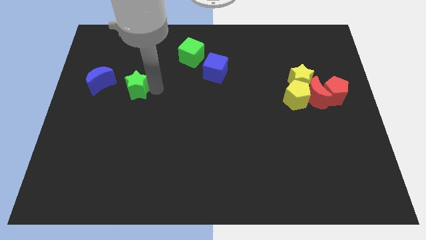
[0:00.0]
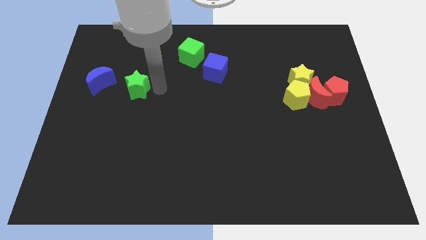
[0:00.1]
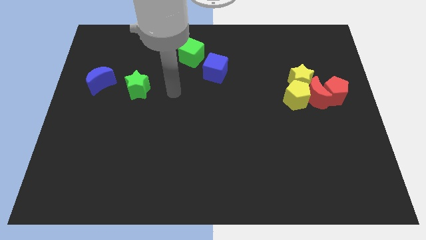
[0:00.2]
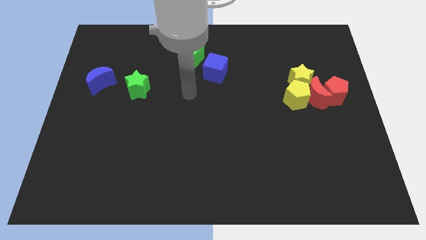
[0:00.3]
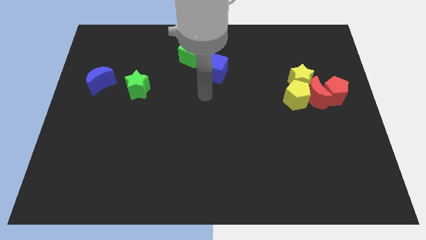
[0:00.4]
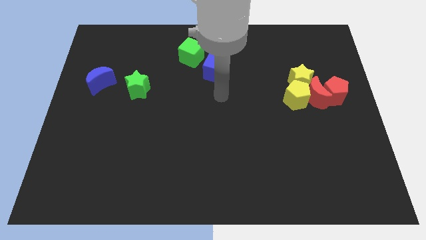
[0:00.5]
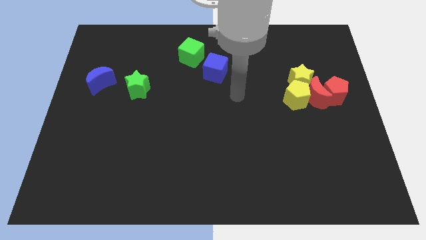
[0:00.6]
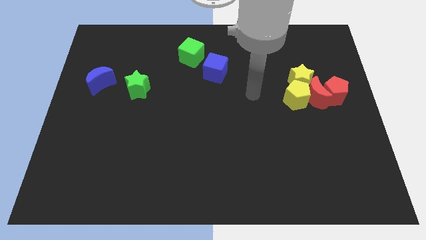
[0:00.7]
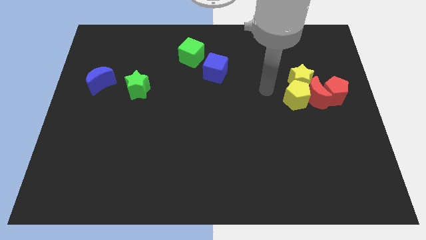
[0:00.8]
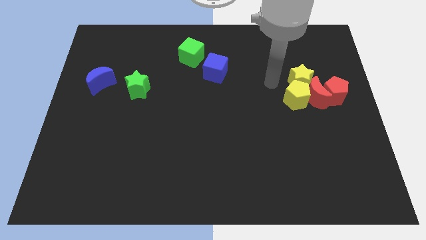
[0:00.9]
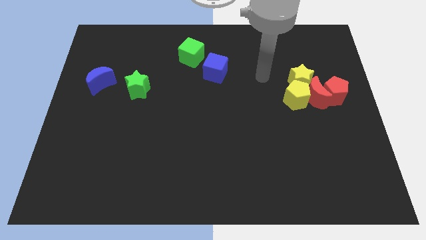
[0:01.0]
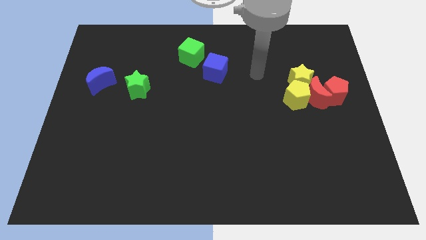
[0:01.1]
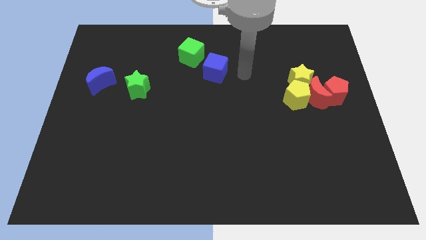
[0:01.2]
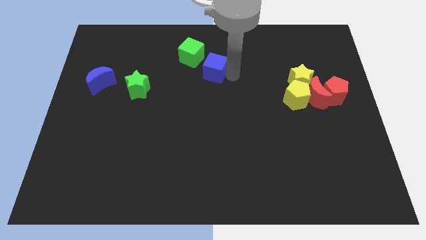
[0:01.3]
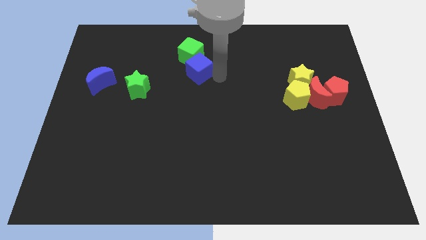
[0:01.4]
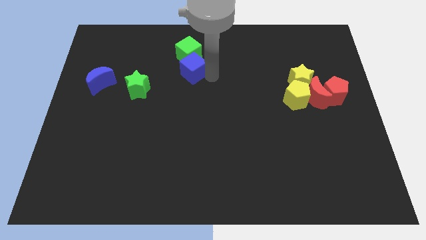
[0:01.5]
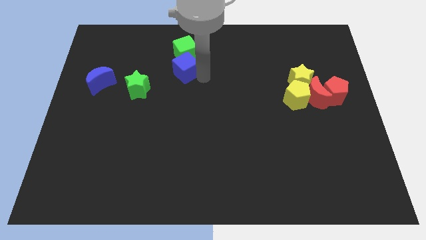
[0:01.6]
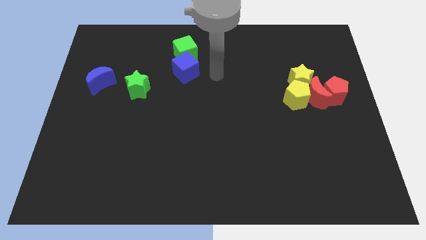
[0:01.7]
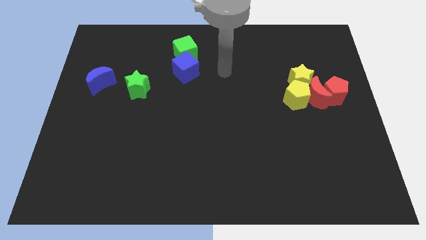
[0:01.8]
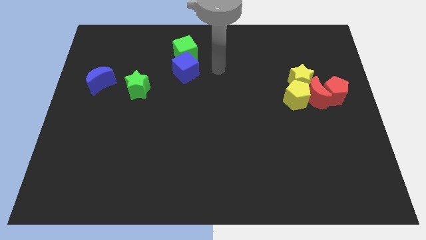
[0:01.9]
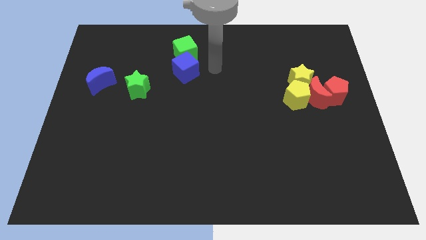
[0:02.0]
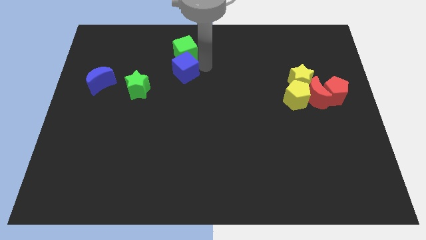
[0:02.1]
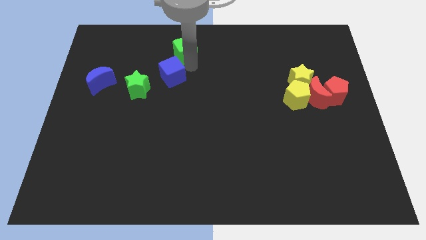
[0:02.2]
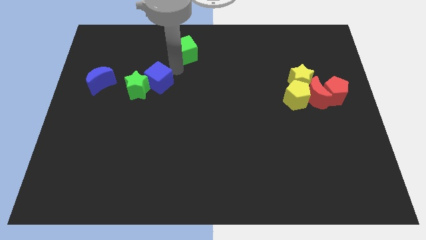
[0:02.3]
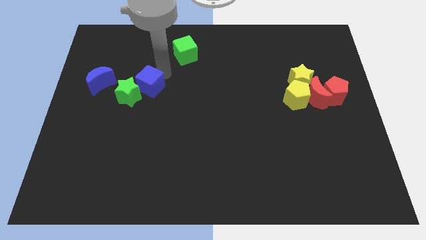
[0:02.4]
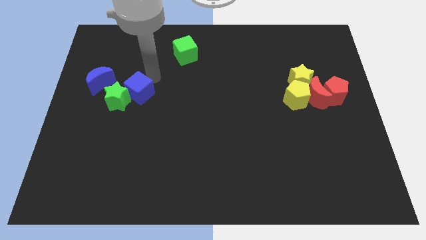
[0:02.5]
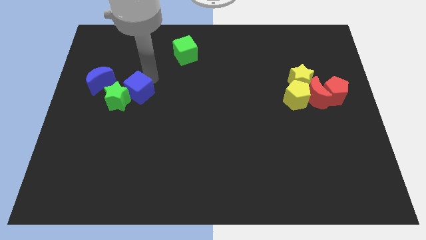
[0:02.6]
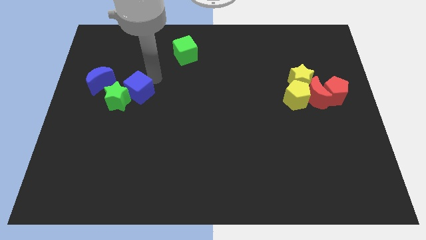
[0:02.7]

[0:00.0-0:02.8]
place blue cube near green star

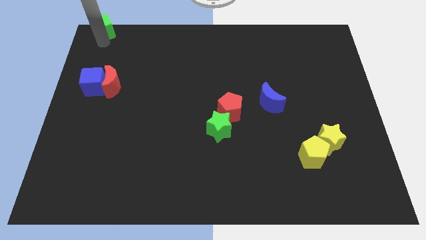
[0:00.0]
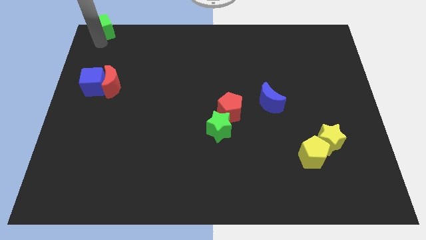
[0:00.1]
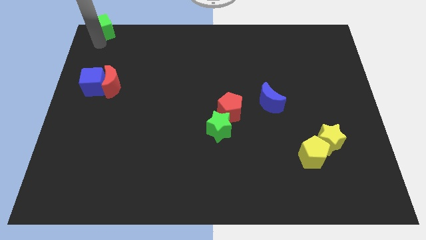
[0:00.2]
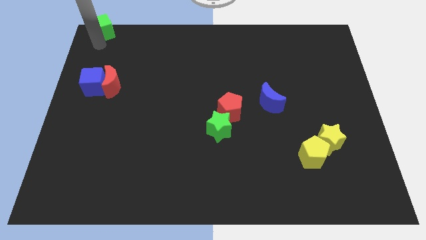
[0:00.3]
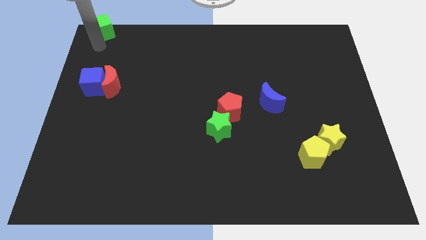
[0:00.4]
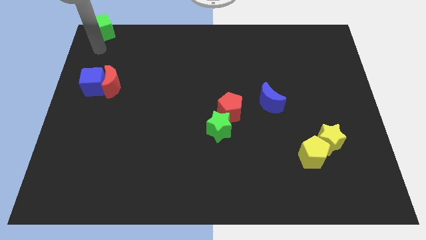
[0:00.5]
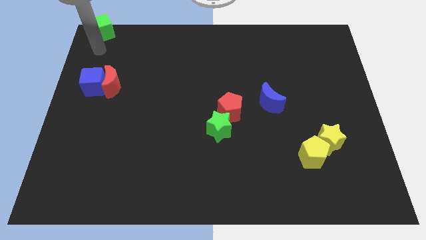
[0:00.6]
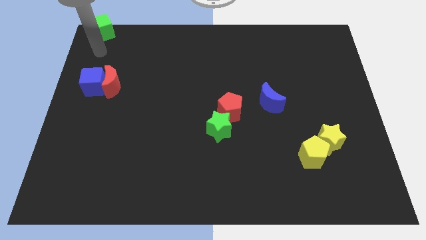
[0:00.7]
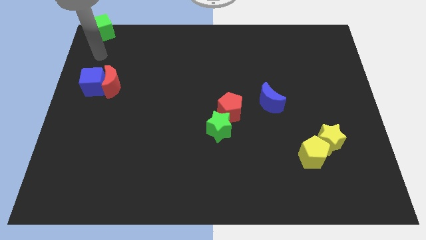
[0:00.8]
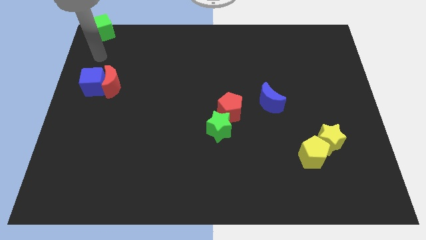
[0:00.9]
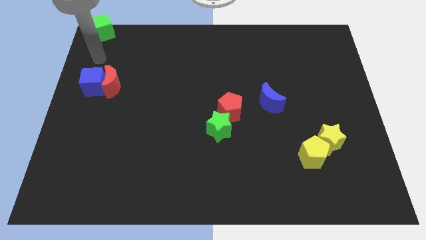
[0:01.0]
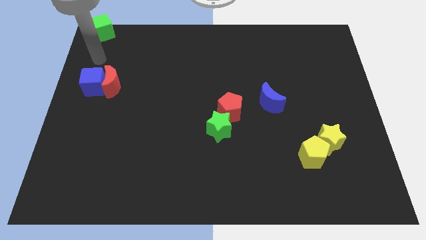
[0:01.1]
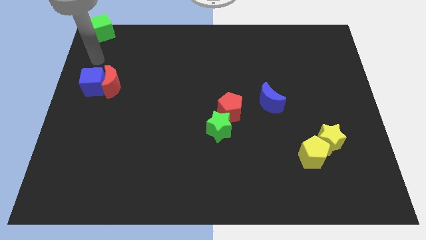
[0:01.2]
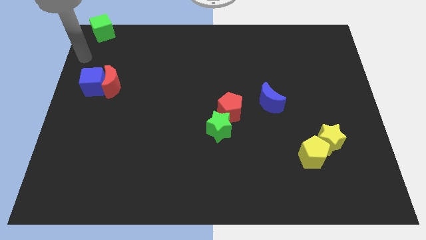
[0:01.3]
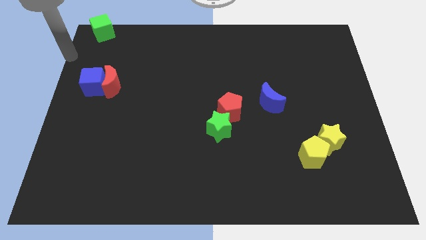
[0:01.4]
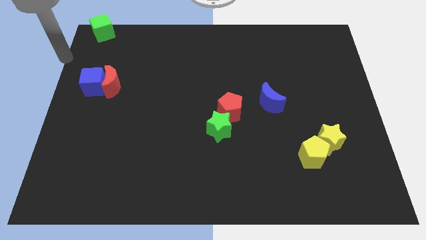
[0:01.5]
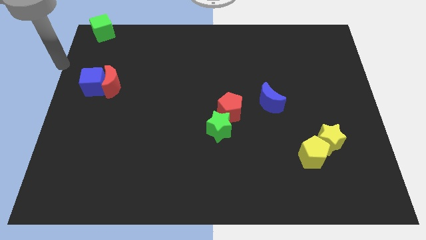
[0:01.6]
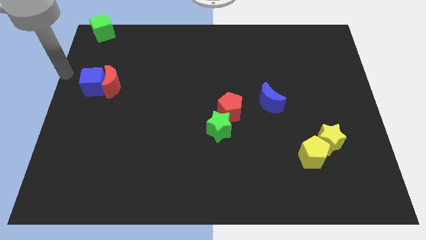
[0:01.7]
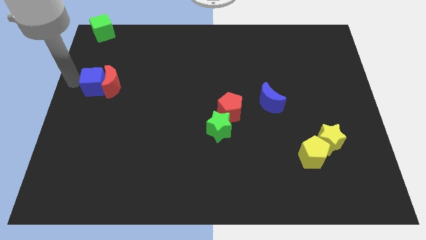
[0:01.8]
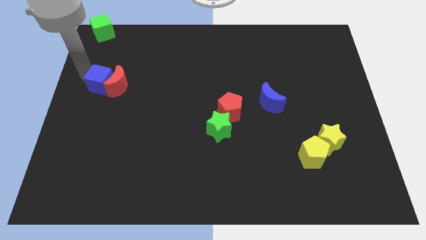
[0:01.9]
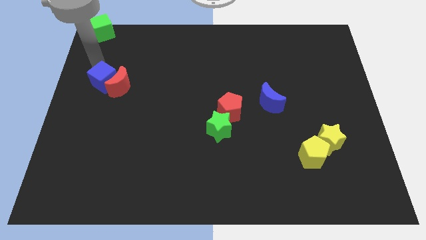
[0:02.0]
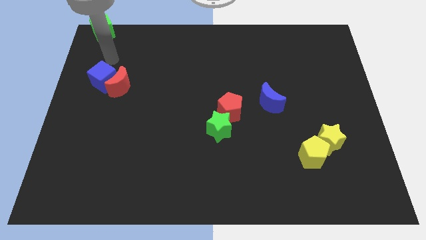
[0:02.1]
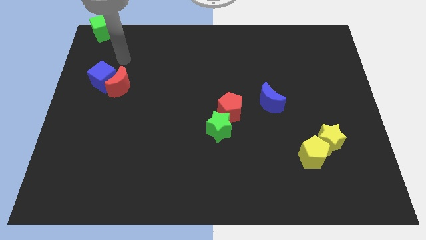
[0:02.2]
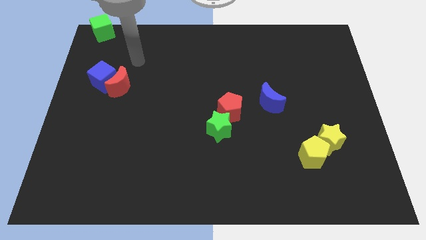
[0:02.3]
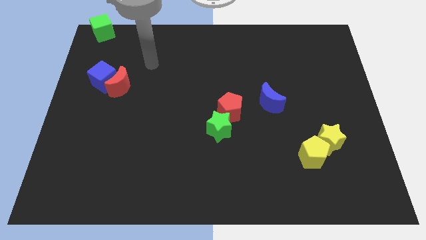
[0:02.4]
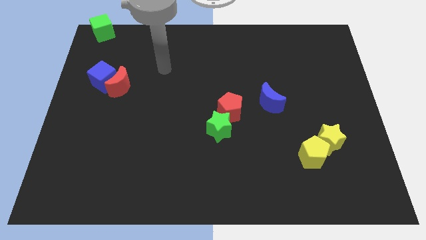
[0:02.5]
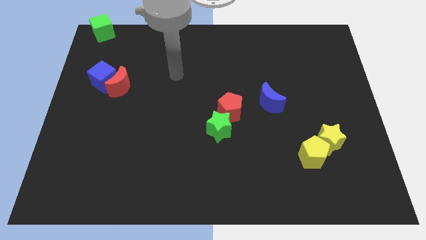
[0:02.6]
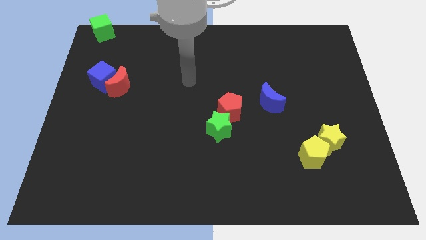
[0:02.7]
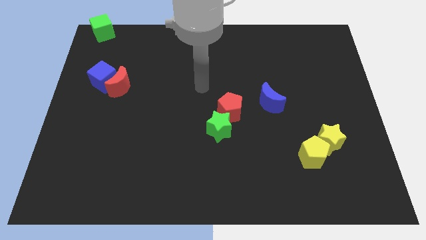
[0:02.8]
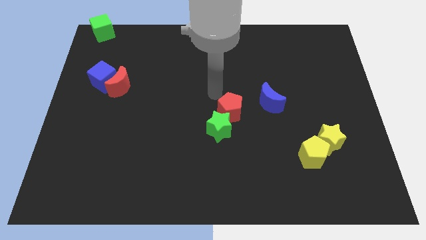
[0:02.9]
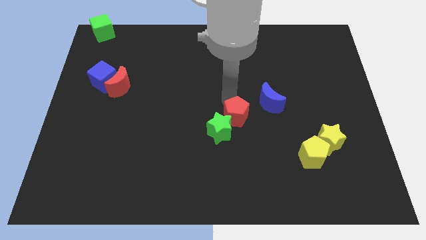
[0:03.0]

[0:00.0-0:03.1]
push the blue cube slightly to the right

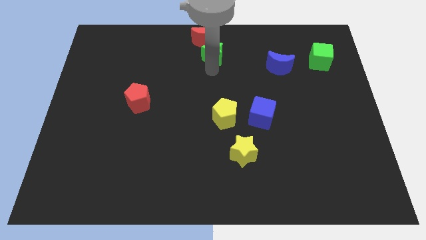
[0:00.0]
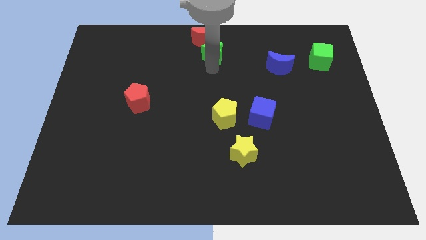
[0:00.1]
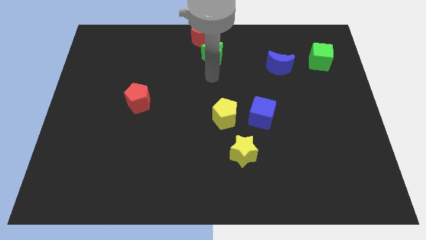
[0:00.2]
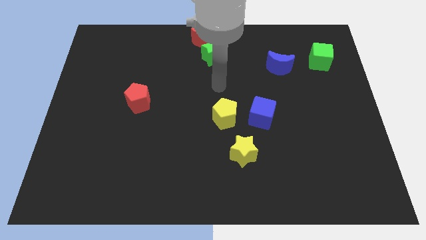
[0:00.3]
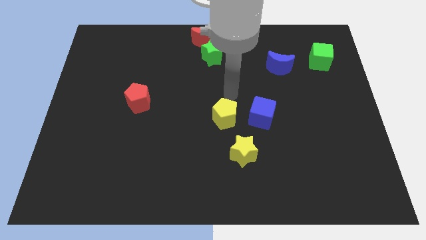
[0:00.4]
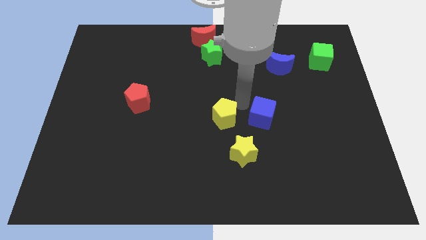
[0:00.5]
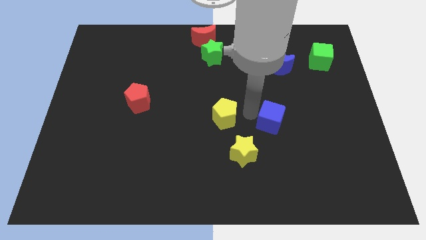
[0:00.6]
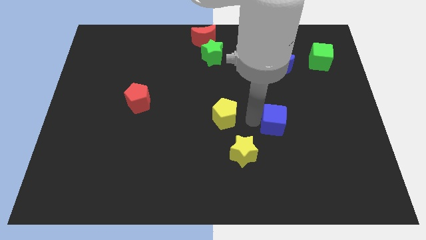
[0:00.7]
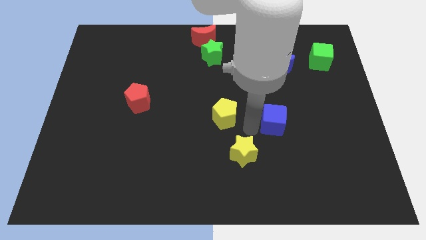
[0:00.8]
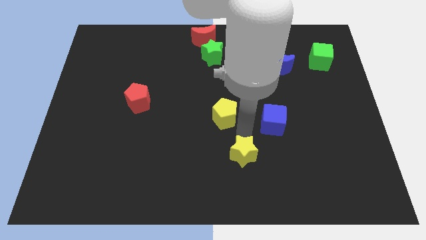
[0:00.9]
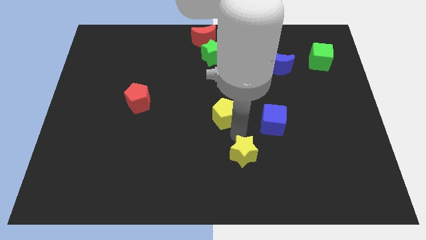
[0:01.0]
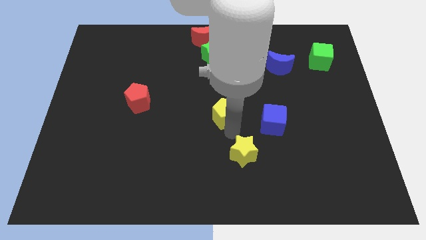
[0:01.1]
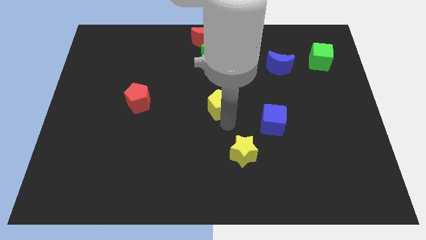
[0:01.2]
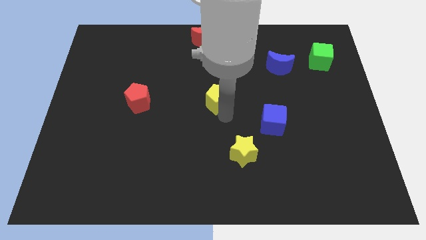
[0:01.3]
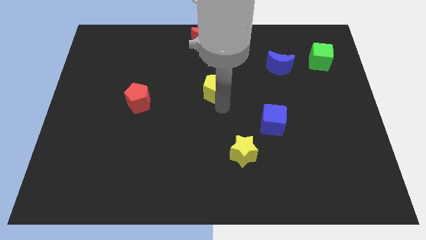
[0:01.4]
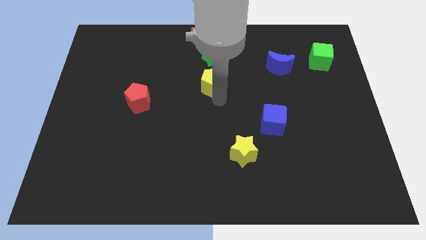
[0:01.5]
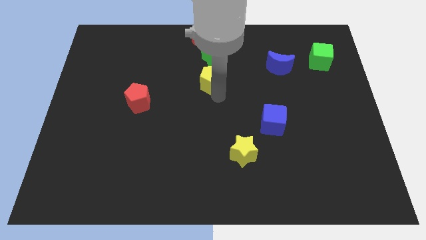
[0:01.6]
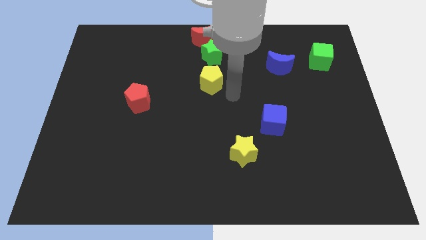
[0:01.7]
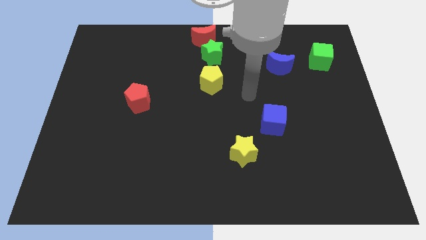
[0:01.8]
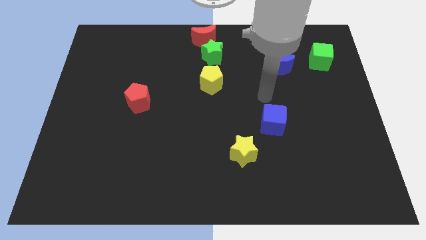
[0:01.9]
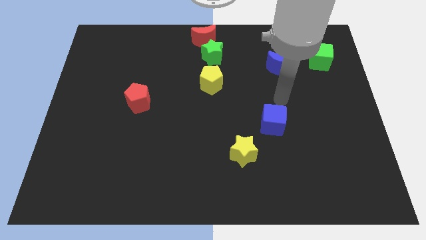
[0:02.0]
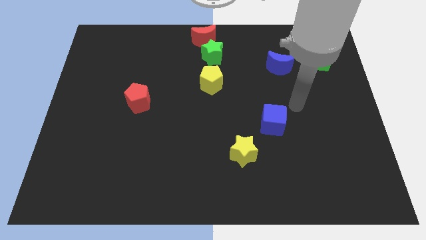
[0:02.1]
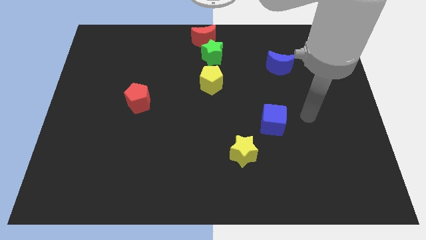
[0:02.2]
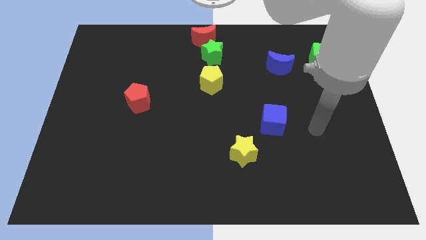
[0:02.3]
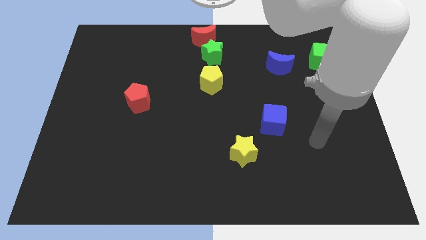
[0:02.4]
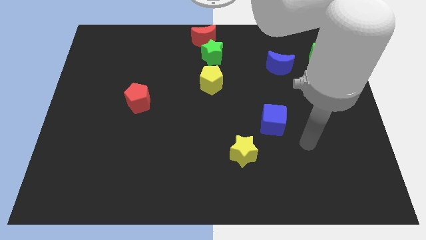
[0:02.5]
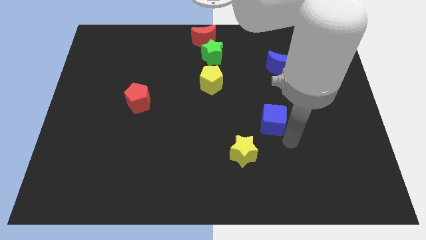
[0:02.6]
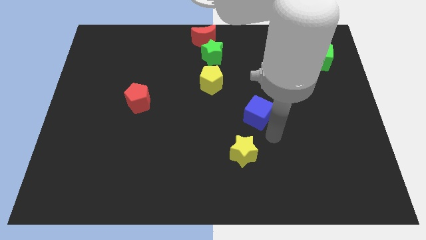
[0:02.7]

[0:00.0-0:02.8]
place yellow star to the bottom of green star

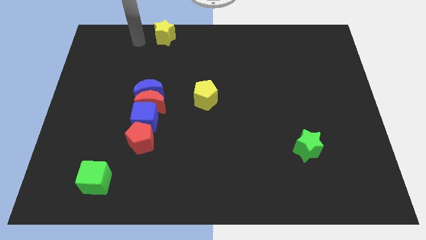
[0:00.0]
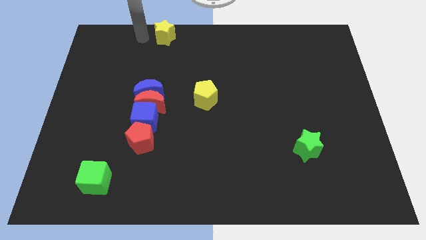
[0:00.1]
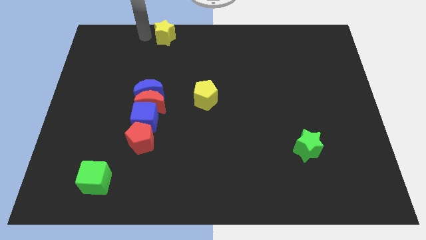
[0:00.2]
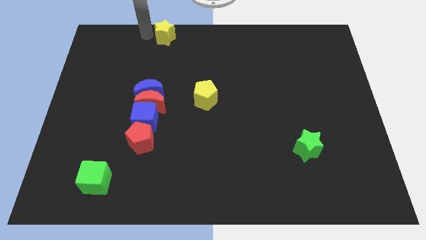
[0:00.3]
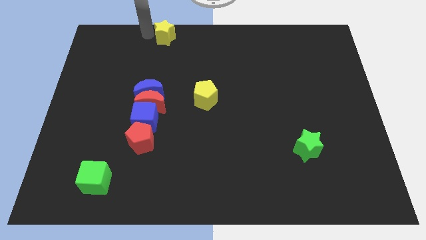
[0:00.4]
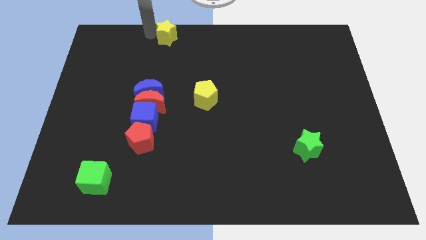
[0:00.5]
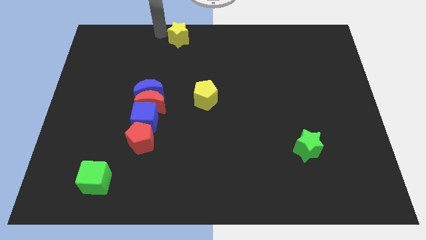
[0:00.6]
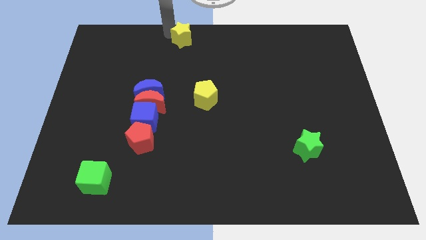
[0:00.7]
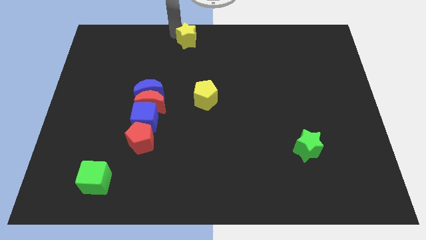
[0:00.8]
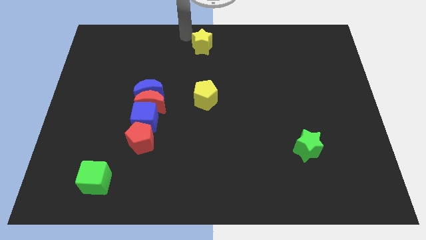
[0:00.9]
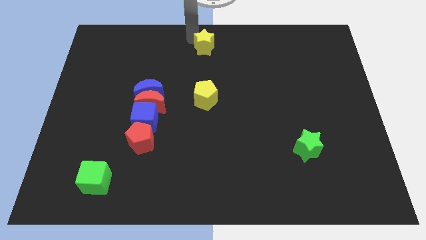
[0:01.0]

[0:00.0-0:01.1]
slide yellow star above yellow pentagon vertically
